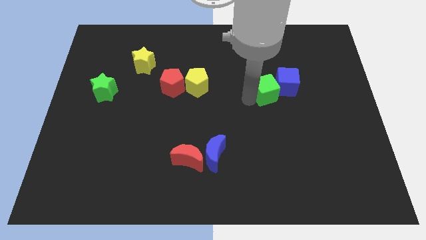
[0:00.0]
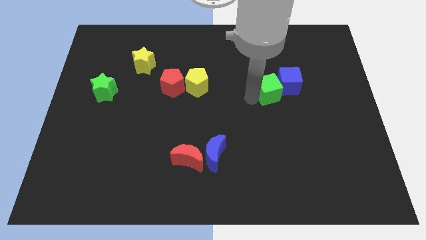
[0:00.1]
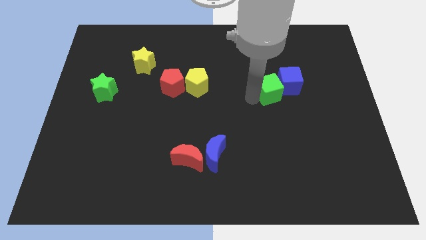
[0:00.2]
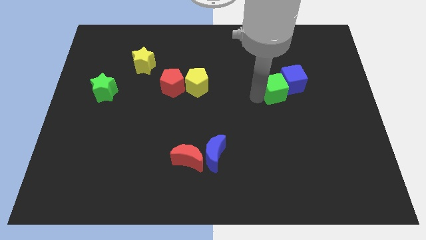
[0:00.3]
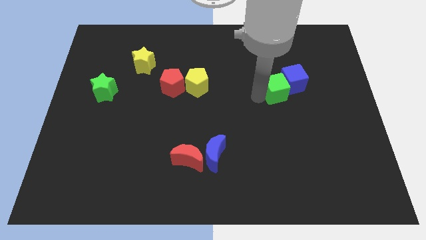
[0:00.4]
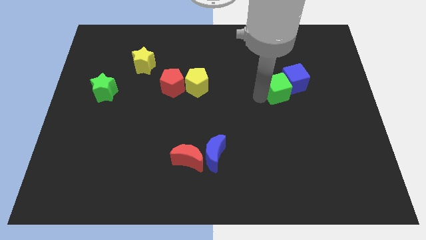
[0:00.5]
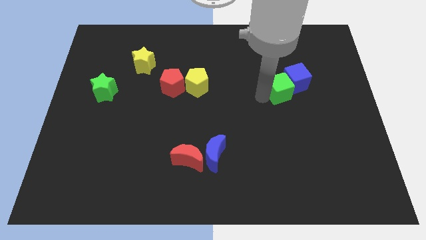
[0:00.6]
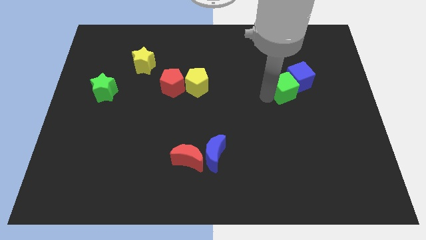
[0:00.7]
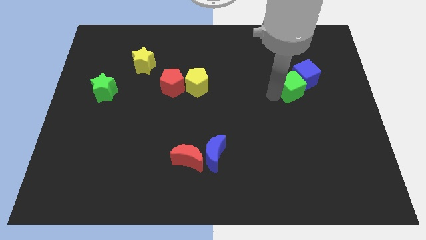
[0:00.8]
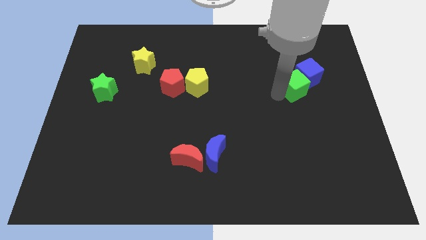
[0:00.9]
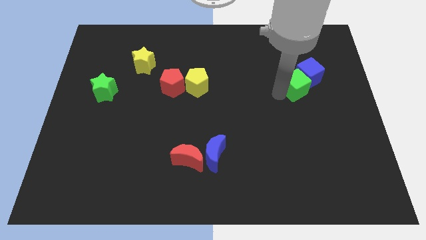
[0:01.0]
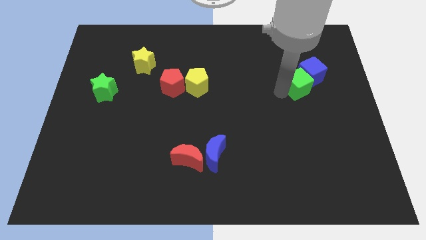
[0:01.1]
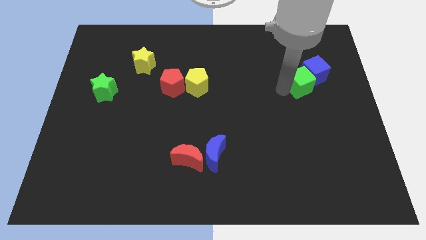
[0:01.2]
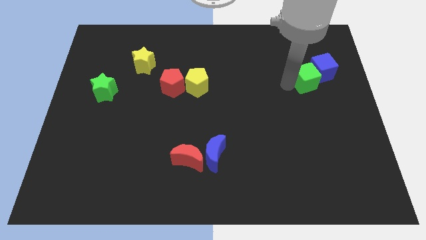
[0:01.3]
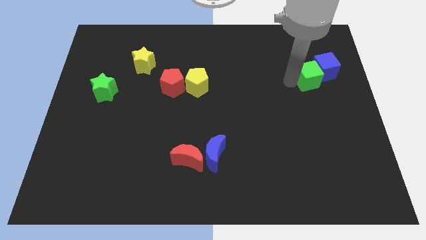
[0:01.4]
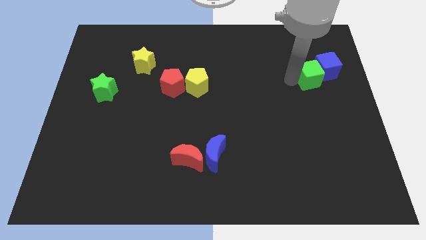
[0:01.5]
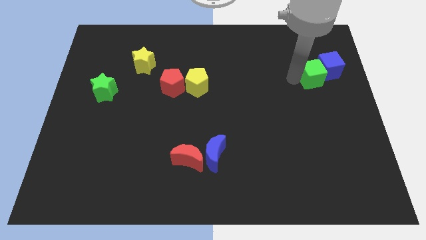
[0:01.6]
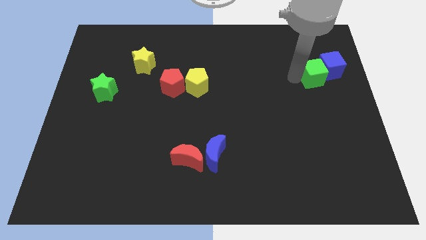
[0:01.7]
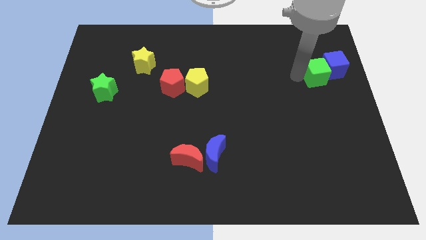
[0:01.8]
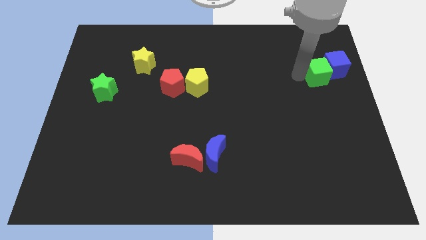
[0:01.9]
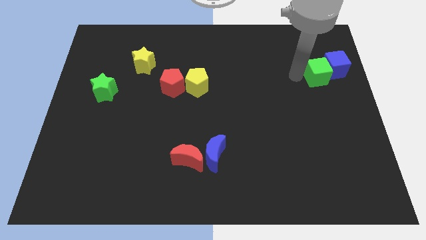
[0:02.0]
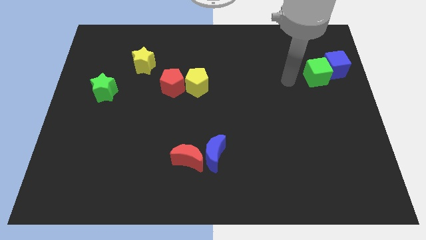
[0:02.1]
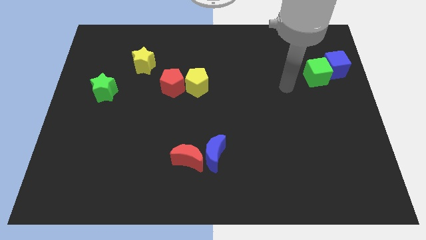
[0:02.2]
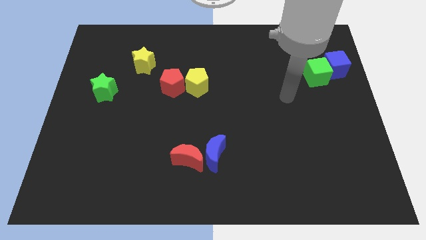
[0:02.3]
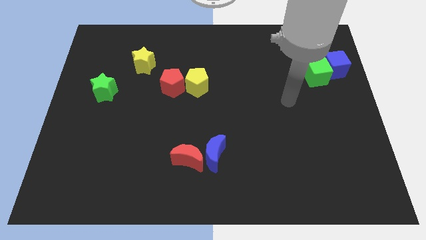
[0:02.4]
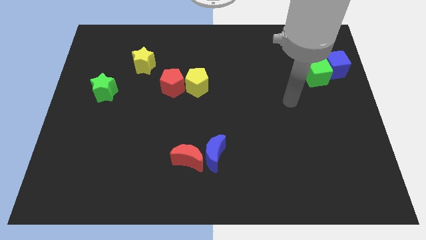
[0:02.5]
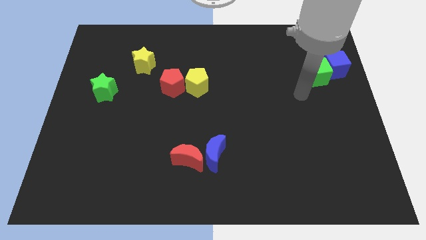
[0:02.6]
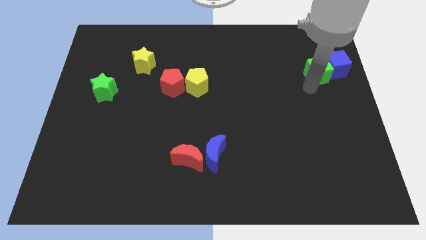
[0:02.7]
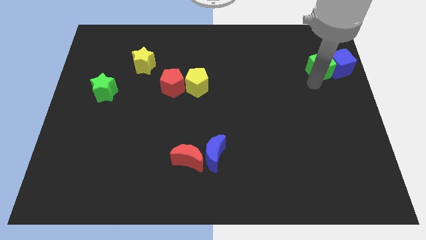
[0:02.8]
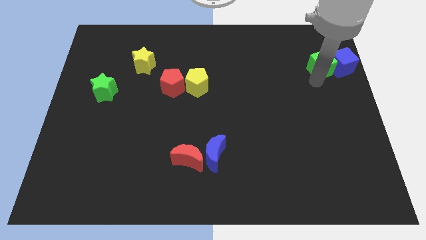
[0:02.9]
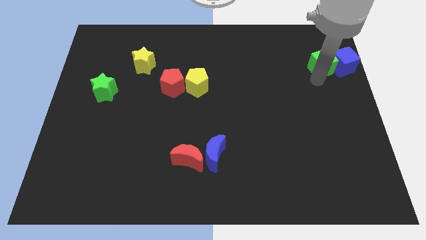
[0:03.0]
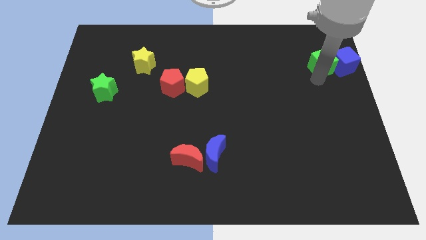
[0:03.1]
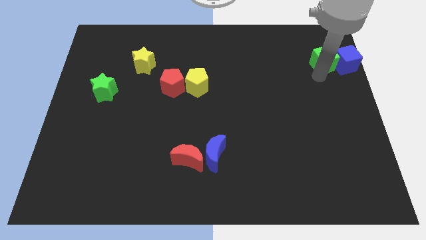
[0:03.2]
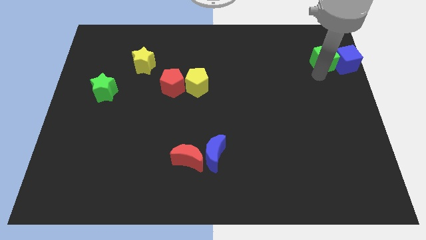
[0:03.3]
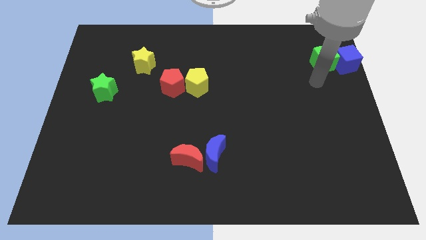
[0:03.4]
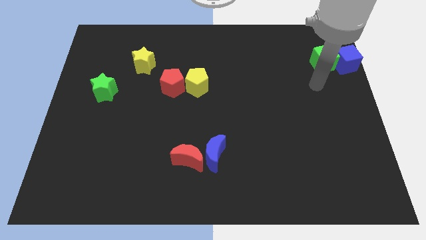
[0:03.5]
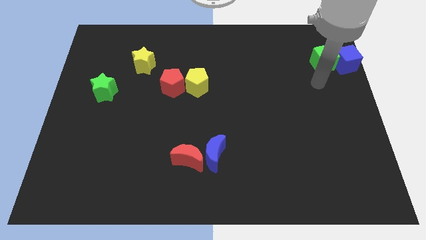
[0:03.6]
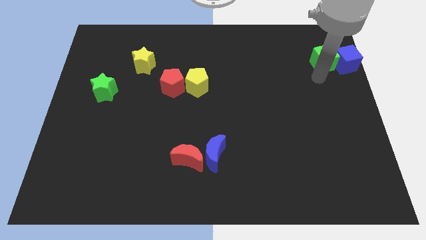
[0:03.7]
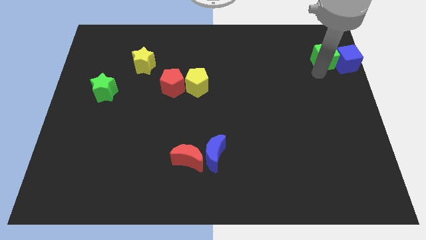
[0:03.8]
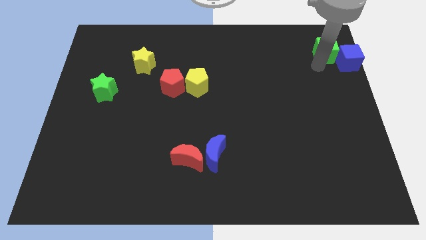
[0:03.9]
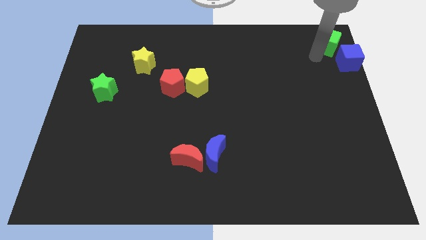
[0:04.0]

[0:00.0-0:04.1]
push green and blue cubes top top right corner

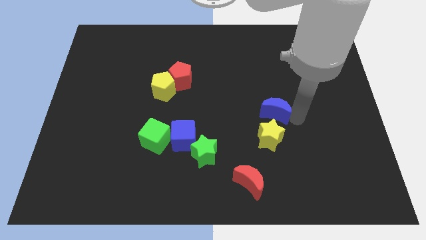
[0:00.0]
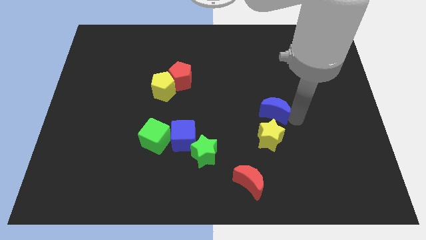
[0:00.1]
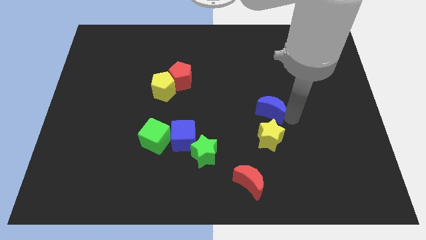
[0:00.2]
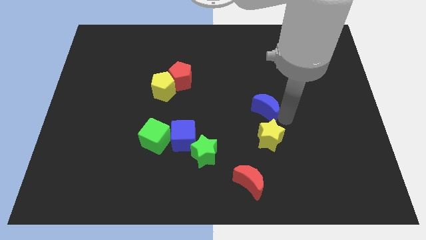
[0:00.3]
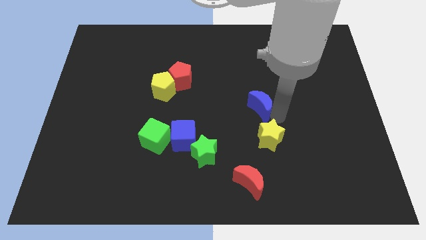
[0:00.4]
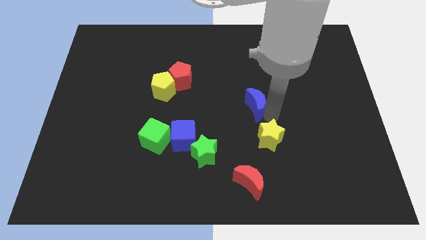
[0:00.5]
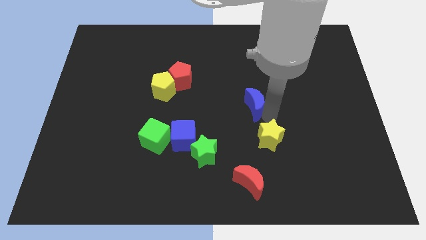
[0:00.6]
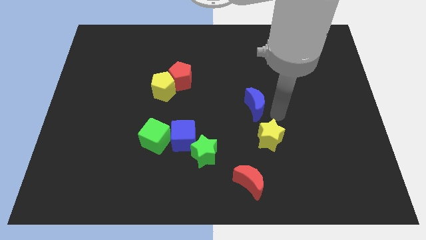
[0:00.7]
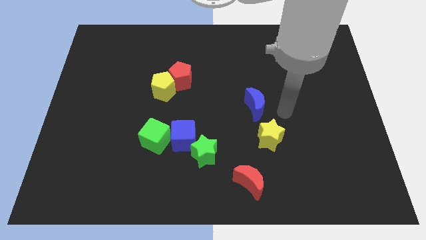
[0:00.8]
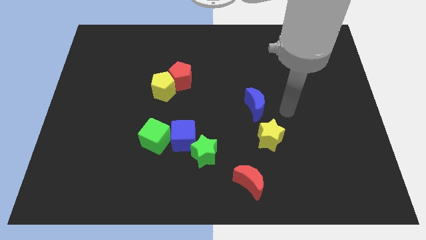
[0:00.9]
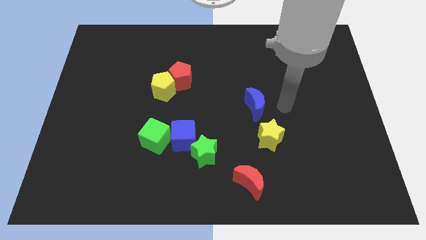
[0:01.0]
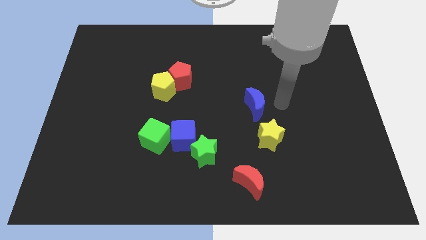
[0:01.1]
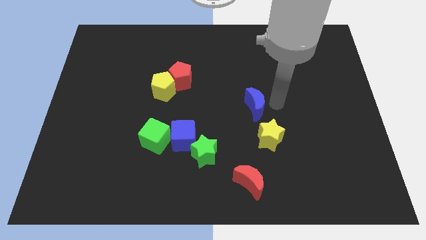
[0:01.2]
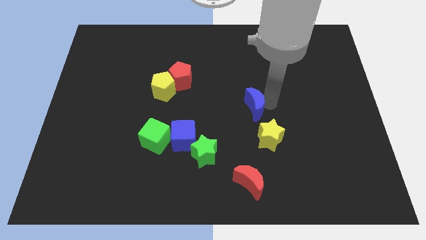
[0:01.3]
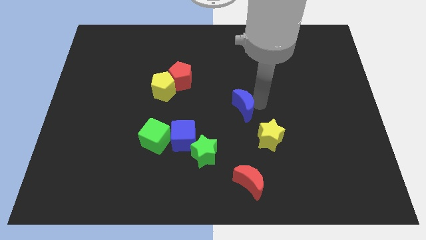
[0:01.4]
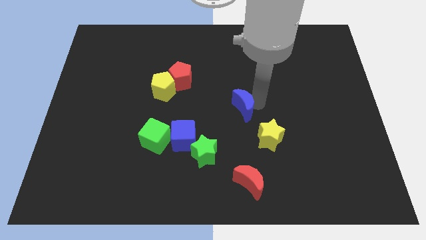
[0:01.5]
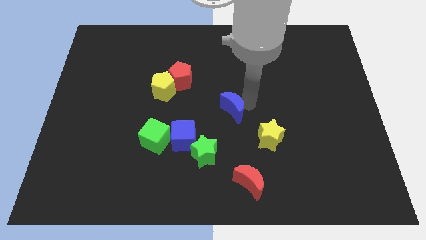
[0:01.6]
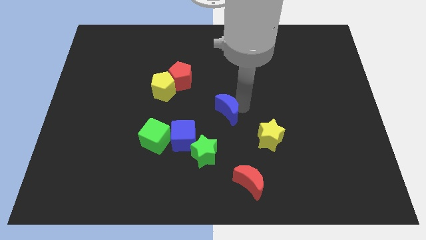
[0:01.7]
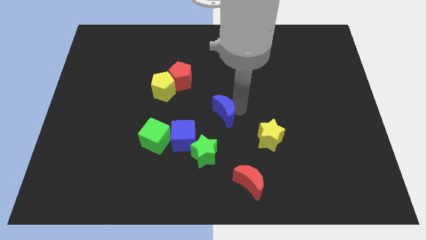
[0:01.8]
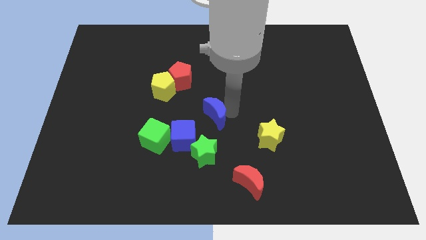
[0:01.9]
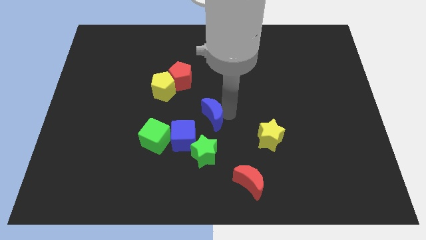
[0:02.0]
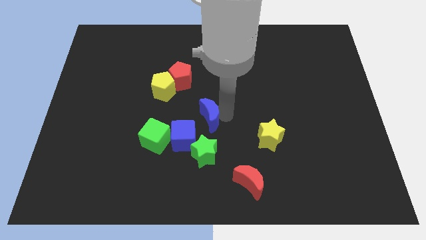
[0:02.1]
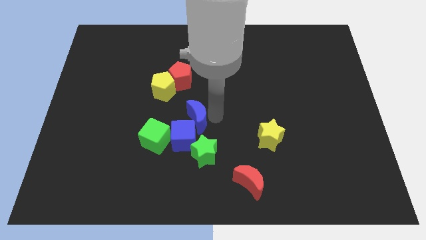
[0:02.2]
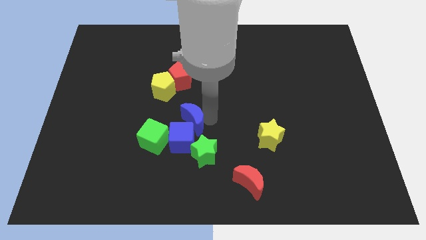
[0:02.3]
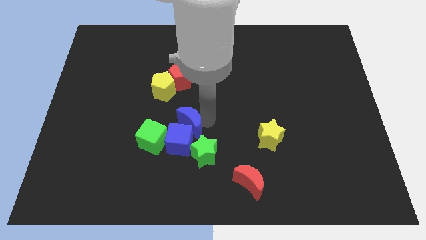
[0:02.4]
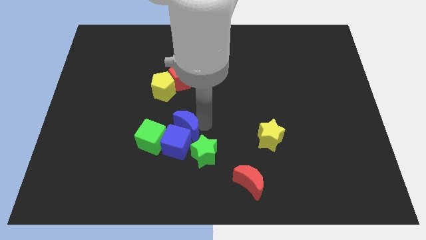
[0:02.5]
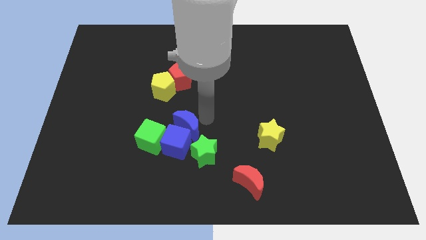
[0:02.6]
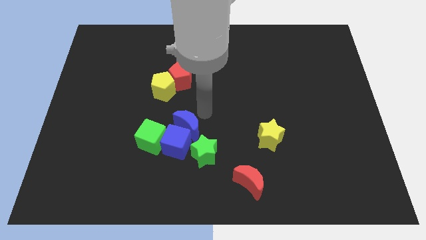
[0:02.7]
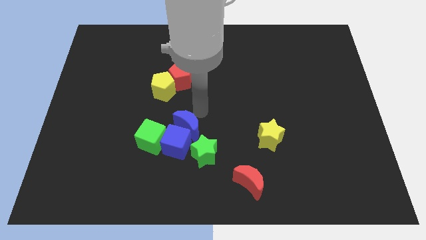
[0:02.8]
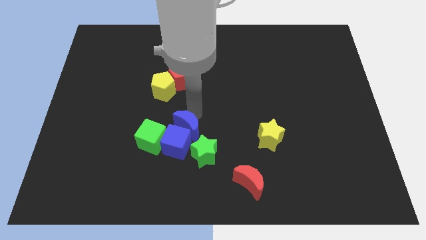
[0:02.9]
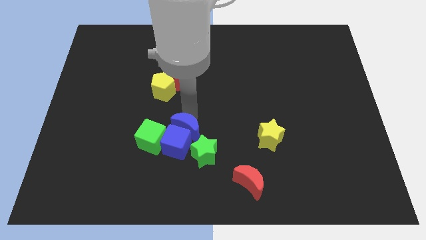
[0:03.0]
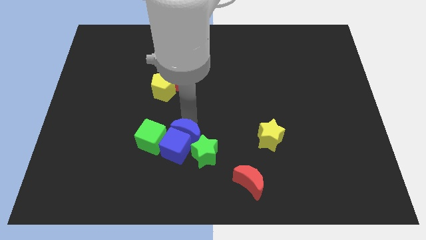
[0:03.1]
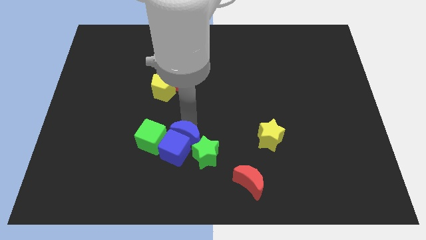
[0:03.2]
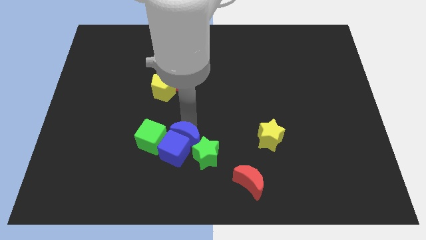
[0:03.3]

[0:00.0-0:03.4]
move the blue moon close to the blue cube

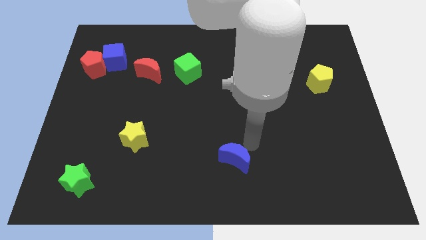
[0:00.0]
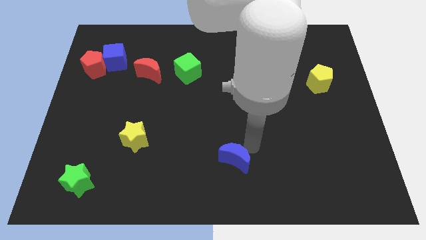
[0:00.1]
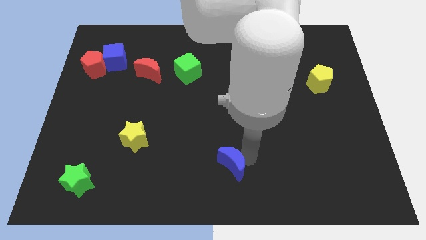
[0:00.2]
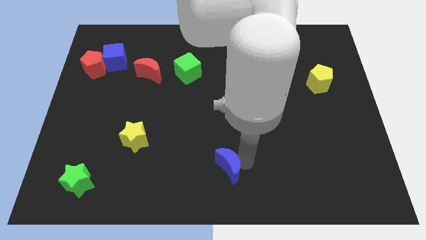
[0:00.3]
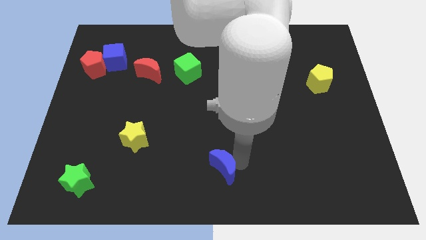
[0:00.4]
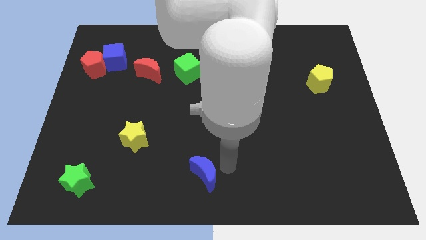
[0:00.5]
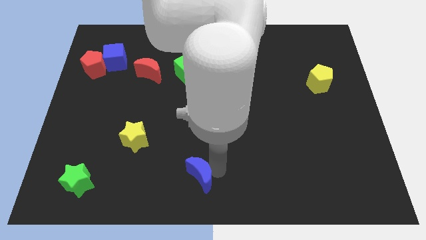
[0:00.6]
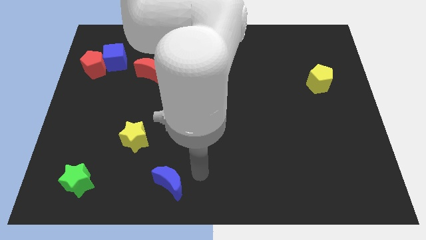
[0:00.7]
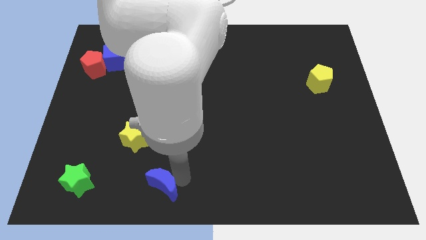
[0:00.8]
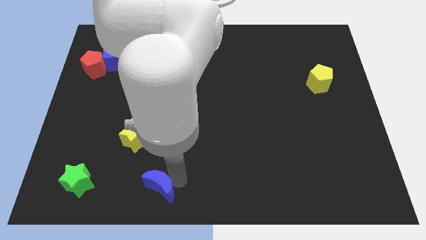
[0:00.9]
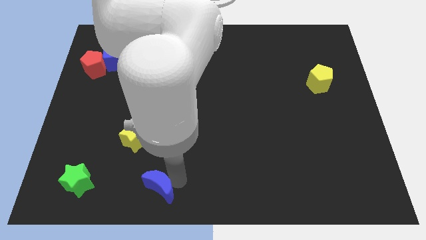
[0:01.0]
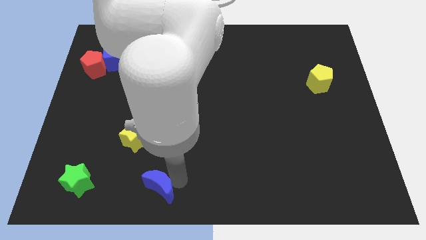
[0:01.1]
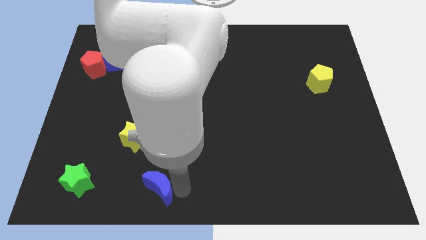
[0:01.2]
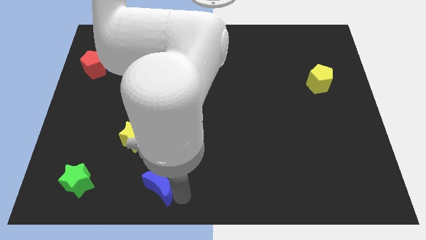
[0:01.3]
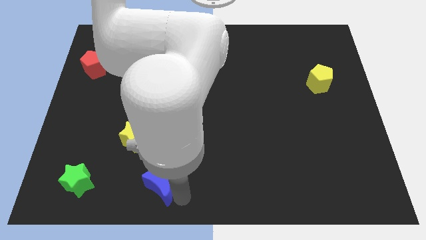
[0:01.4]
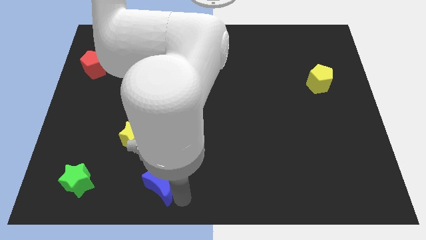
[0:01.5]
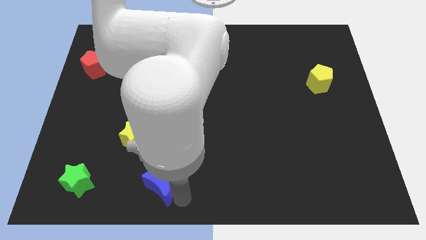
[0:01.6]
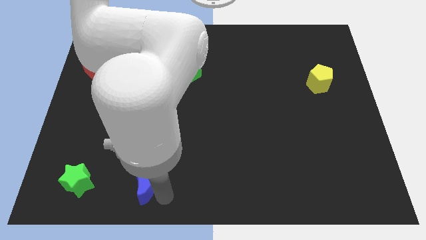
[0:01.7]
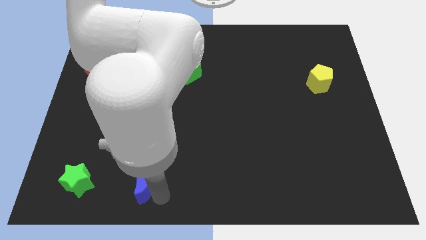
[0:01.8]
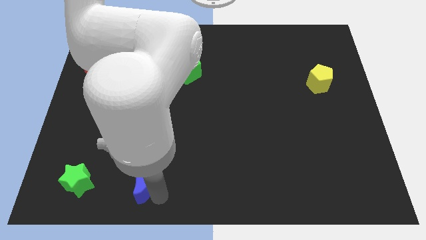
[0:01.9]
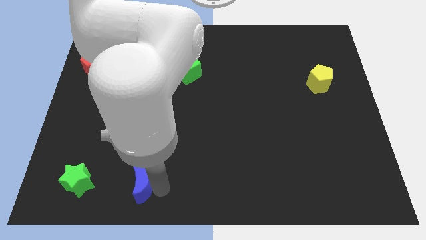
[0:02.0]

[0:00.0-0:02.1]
slide blue moon vertical to the yellow star
